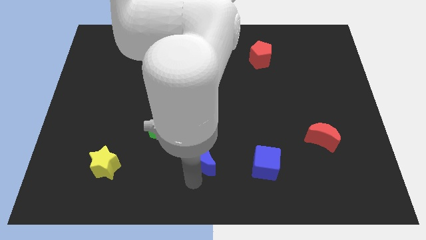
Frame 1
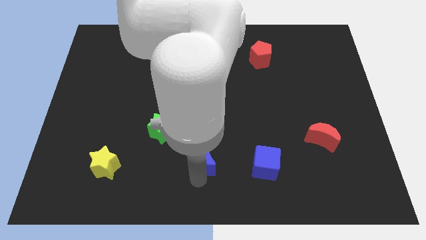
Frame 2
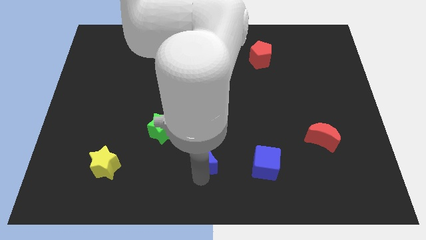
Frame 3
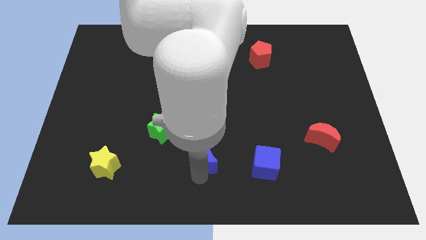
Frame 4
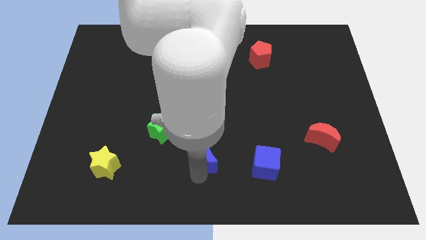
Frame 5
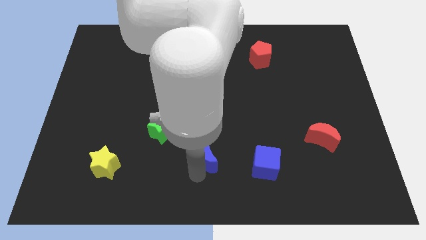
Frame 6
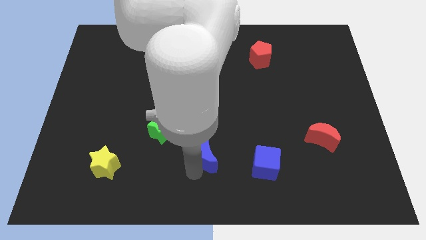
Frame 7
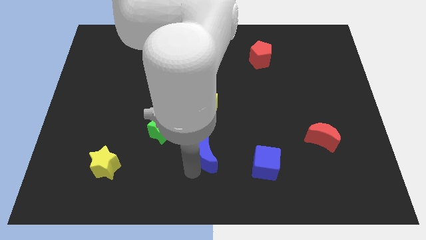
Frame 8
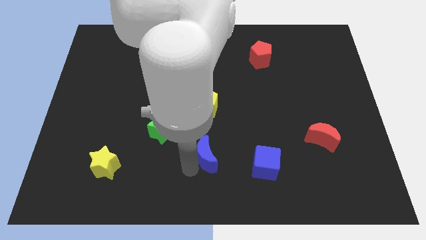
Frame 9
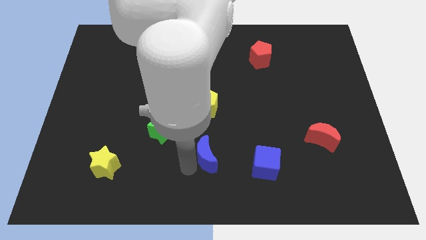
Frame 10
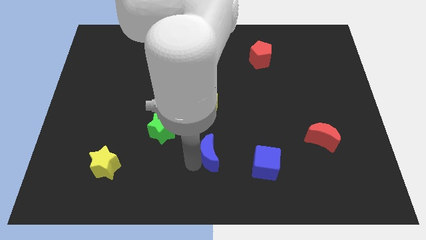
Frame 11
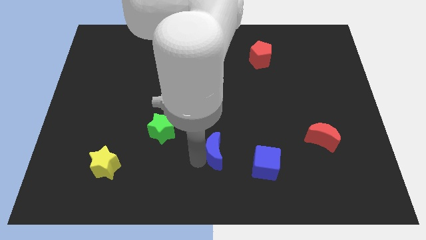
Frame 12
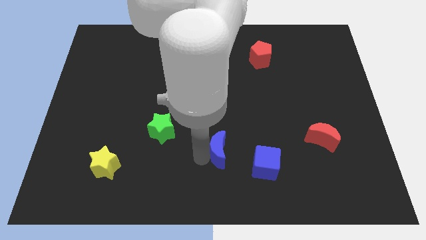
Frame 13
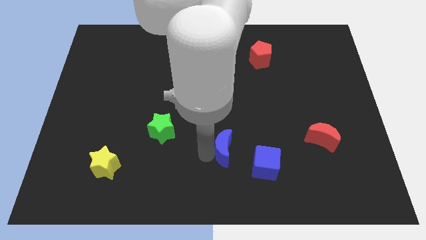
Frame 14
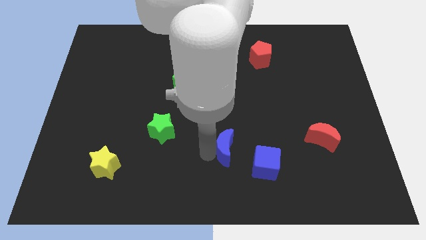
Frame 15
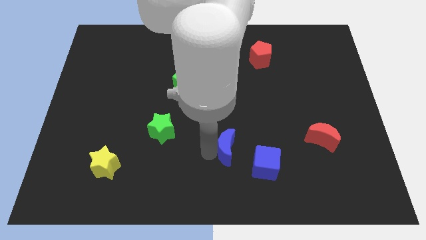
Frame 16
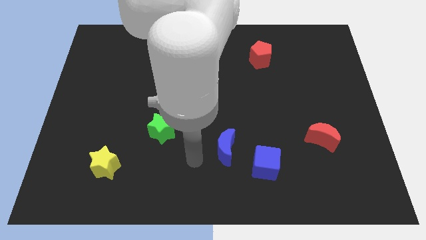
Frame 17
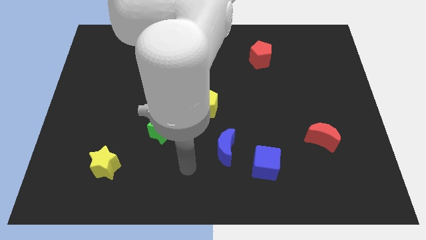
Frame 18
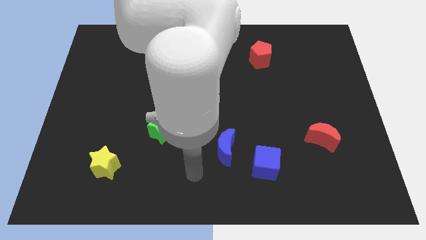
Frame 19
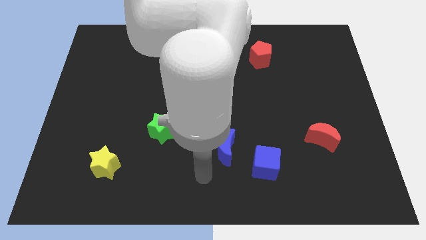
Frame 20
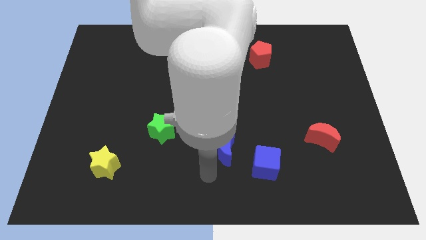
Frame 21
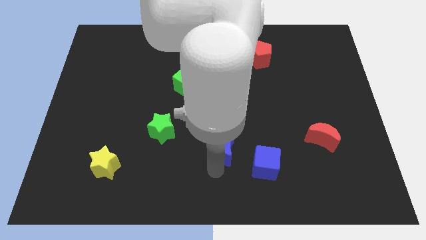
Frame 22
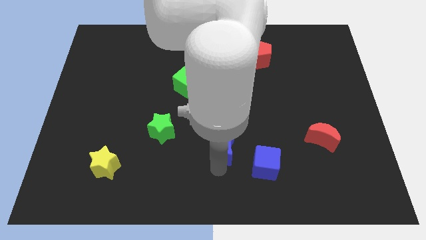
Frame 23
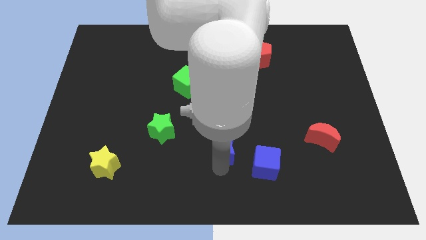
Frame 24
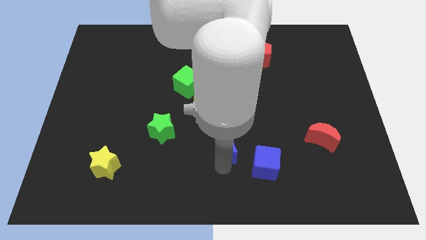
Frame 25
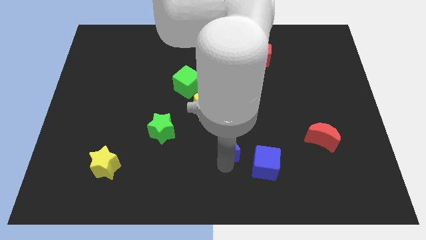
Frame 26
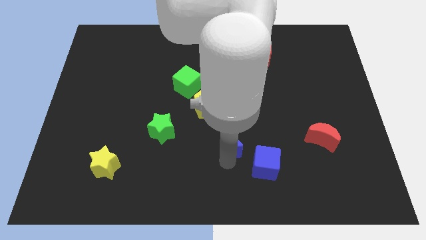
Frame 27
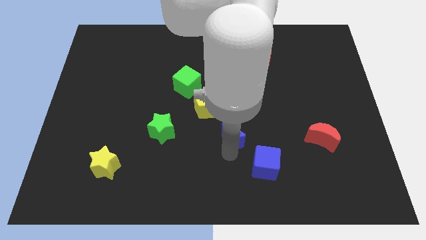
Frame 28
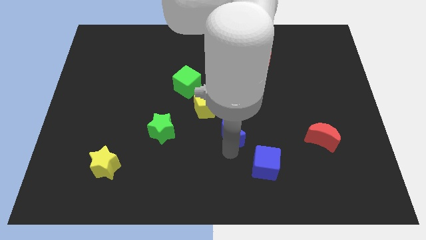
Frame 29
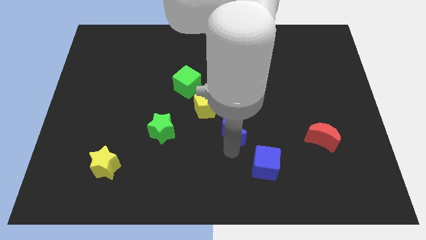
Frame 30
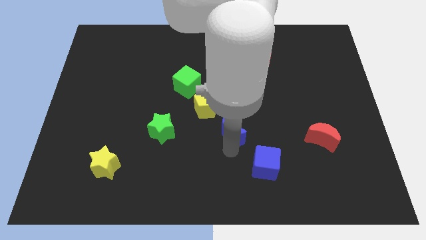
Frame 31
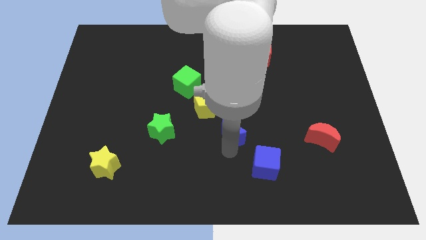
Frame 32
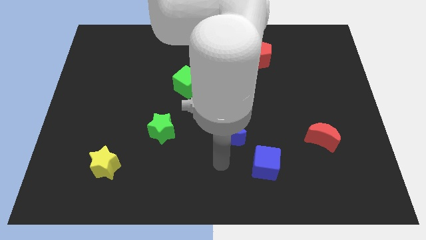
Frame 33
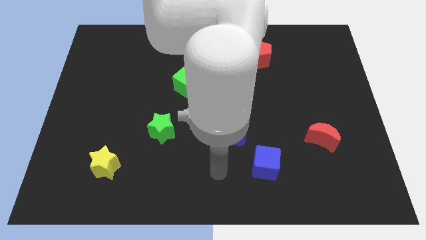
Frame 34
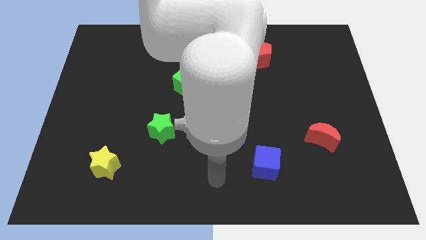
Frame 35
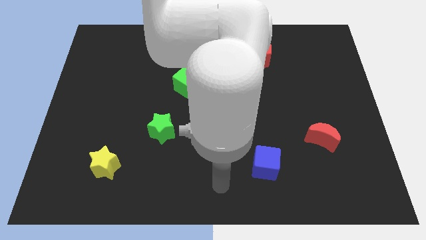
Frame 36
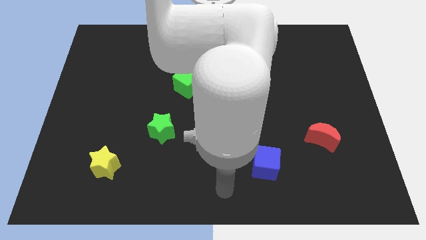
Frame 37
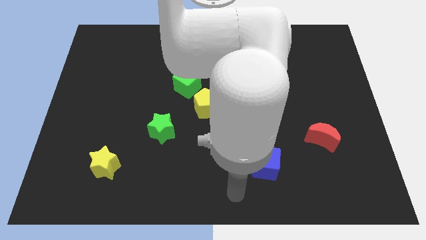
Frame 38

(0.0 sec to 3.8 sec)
place the blue crescent in between the blue cube and yellow pentagon

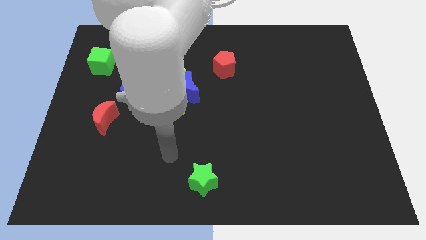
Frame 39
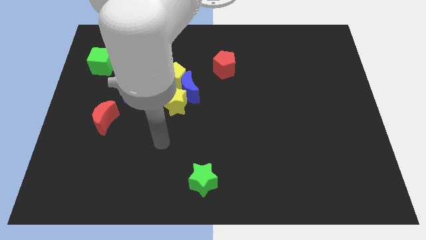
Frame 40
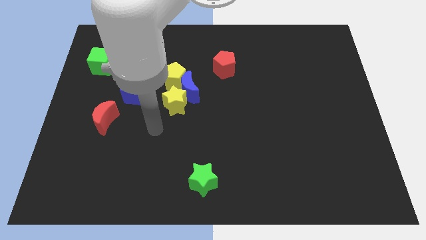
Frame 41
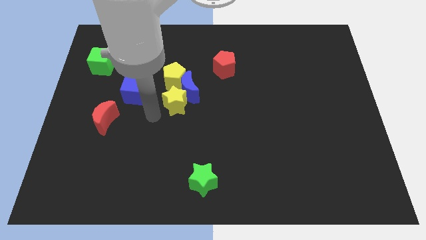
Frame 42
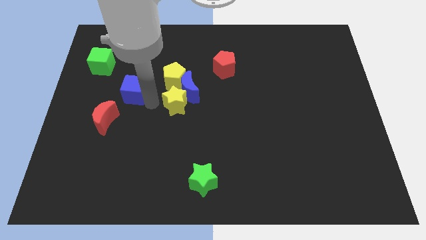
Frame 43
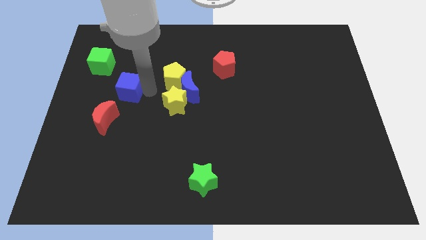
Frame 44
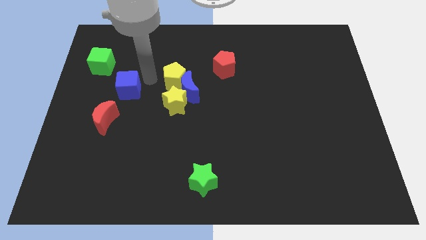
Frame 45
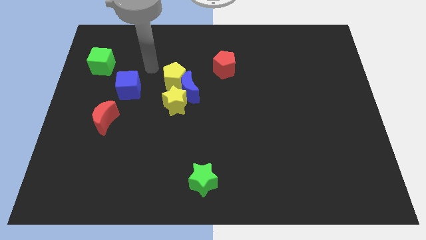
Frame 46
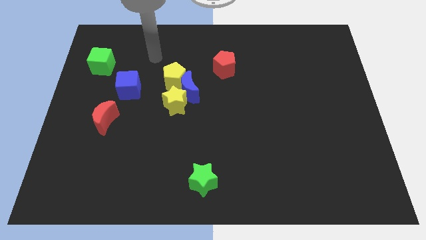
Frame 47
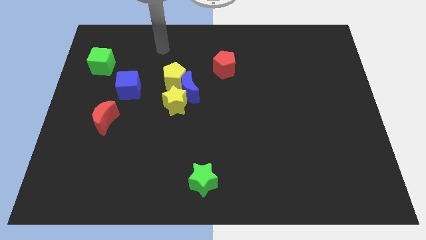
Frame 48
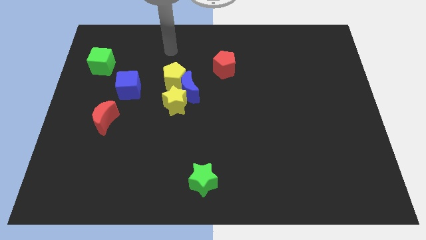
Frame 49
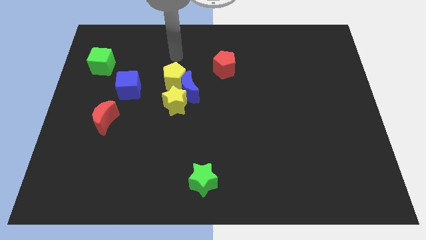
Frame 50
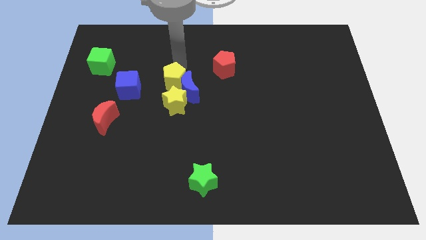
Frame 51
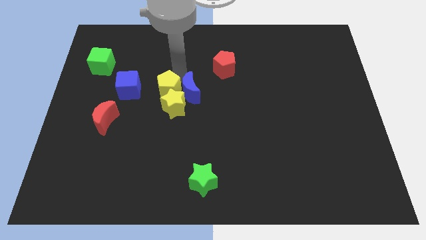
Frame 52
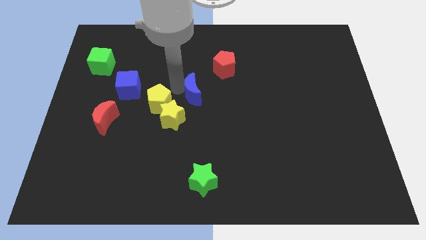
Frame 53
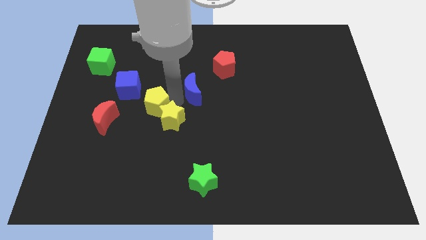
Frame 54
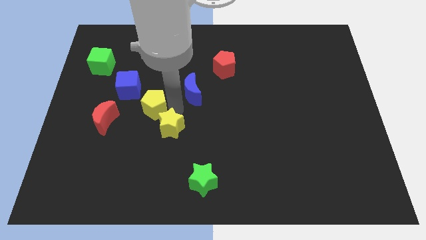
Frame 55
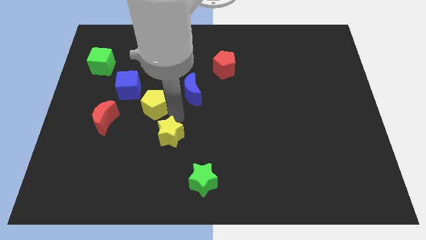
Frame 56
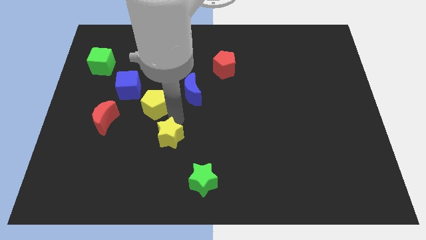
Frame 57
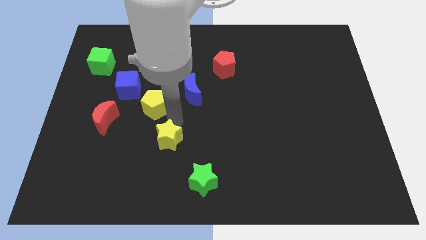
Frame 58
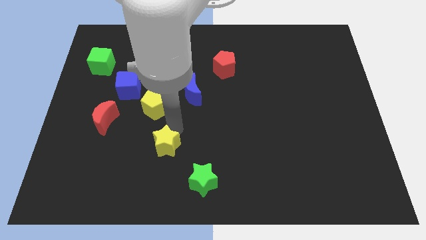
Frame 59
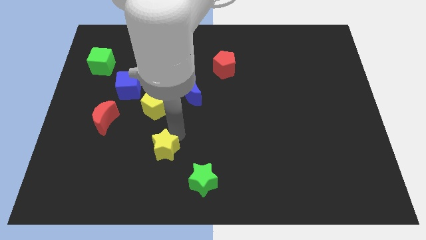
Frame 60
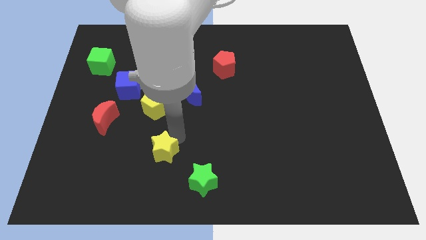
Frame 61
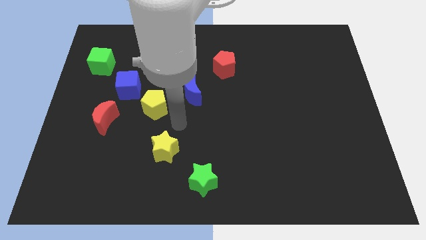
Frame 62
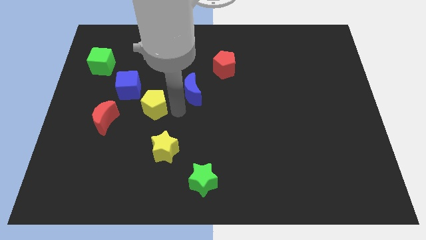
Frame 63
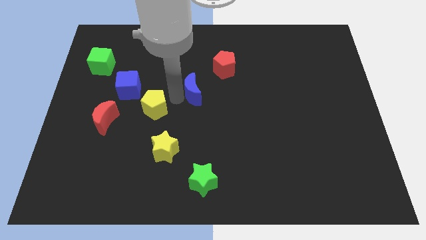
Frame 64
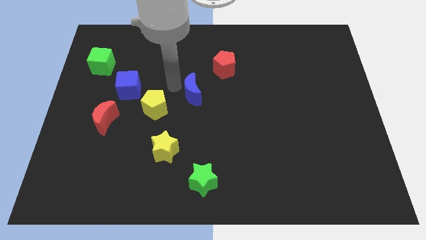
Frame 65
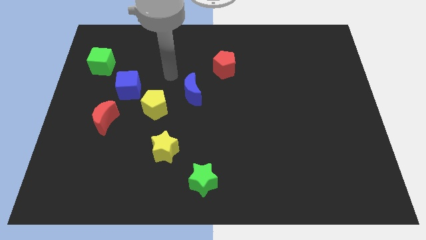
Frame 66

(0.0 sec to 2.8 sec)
slightly move the yellow star down

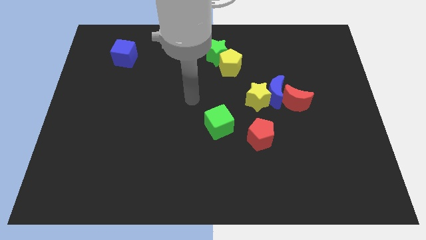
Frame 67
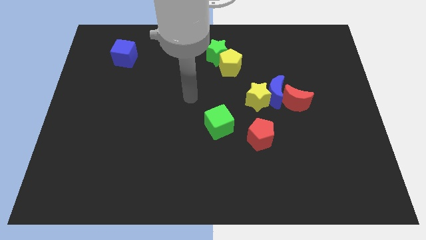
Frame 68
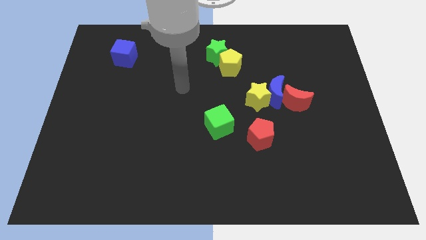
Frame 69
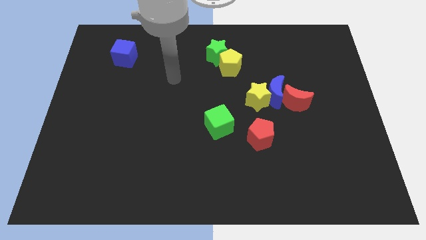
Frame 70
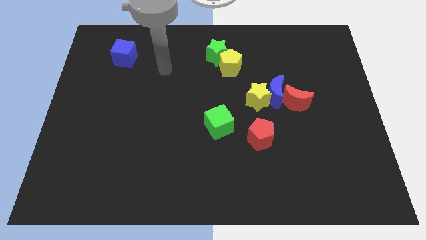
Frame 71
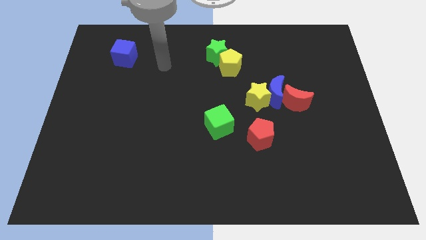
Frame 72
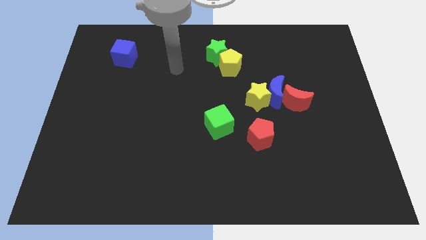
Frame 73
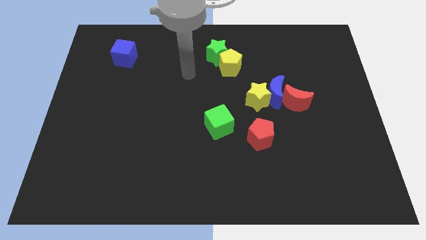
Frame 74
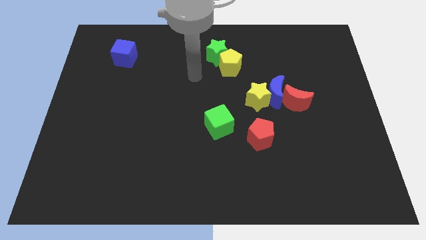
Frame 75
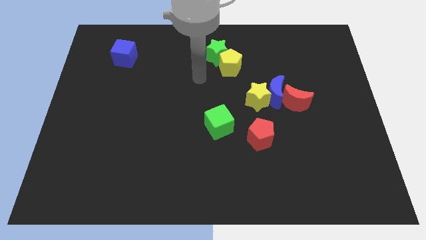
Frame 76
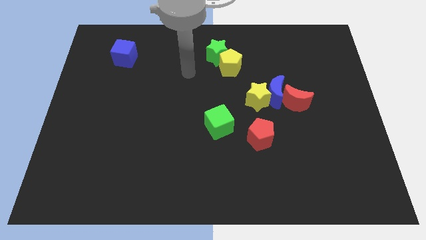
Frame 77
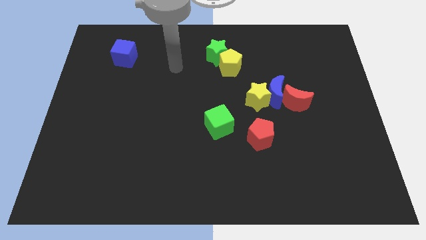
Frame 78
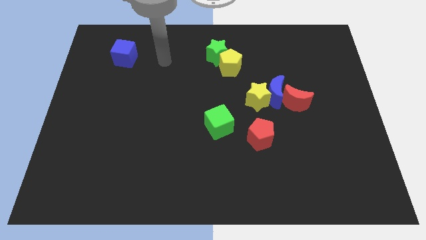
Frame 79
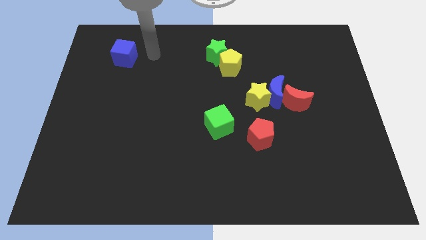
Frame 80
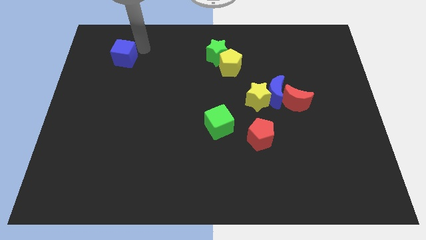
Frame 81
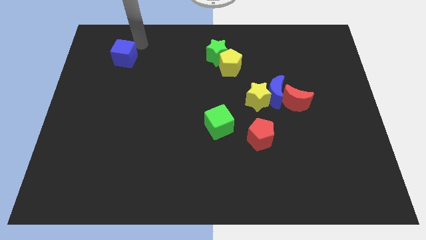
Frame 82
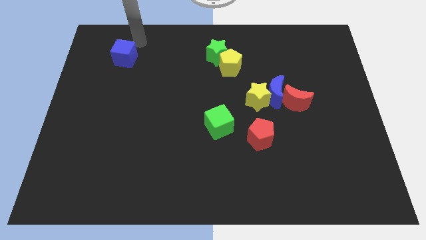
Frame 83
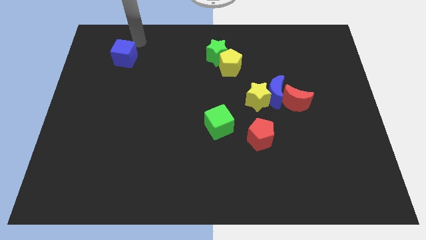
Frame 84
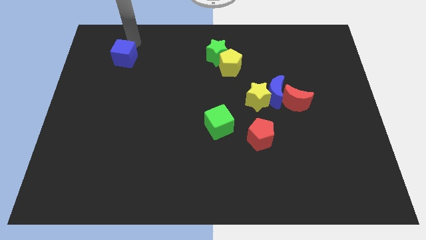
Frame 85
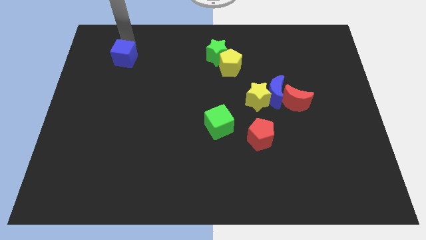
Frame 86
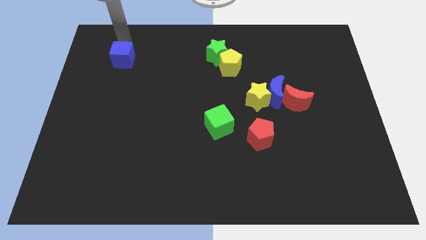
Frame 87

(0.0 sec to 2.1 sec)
move the arm towards the blue cube

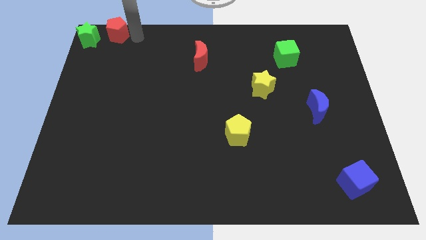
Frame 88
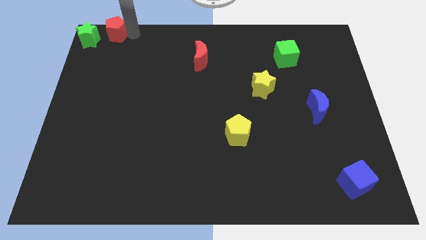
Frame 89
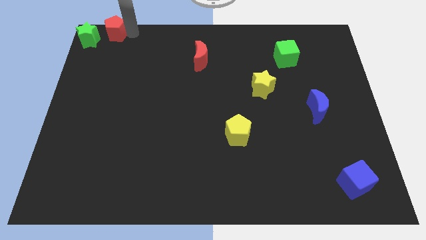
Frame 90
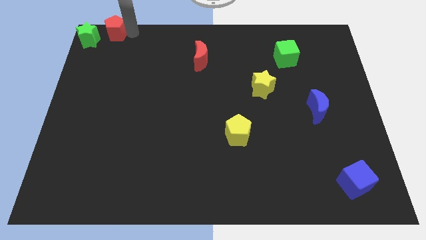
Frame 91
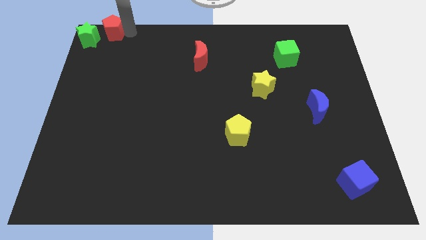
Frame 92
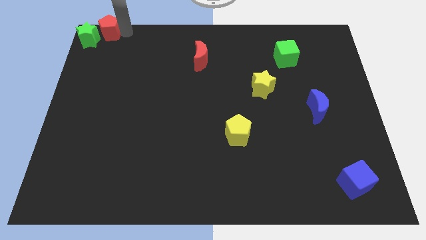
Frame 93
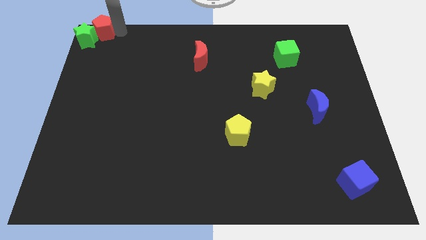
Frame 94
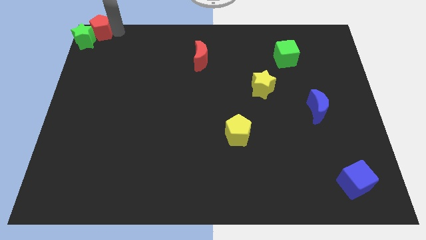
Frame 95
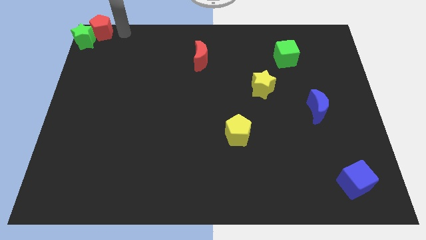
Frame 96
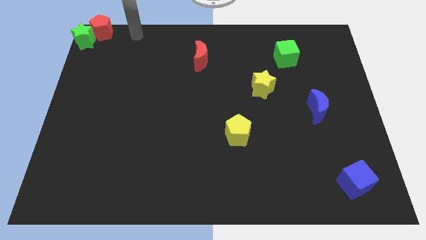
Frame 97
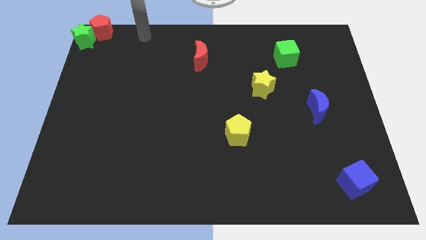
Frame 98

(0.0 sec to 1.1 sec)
push the red pentagon into the green star
